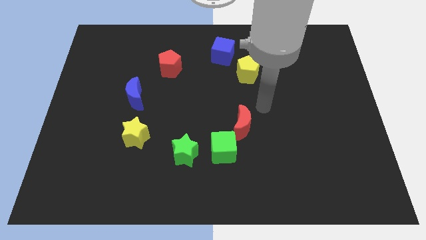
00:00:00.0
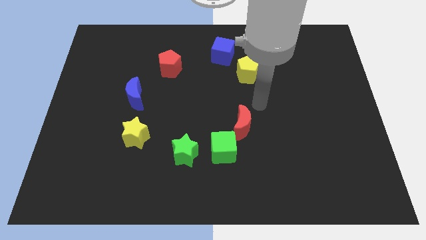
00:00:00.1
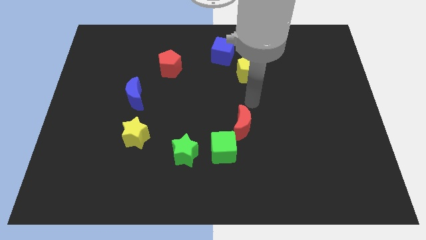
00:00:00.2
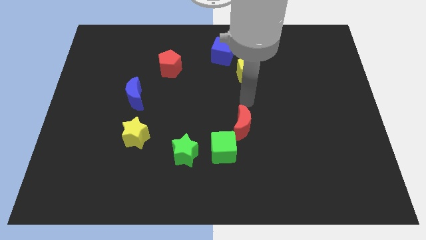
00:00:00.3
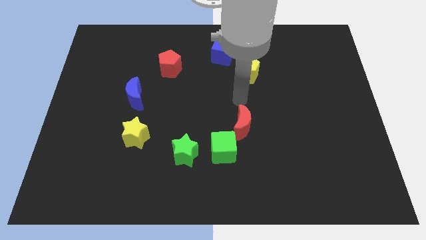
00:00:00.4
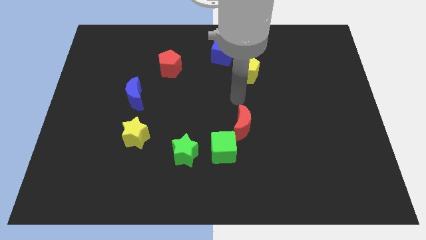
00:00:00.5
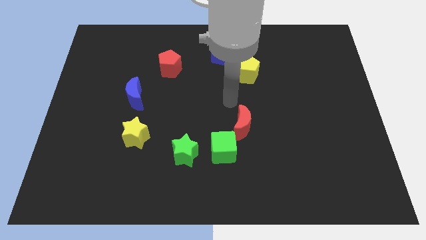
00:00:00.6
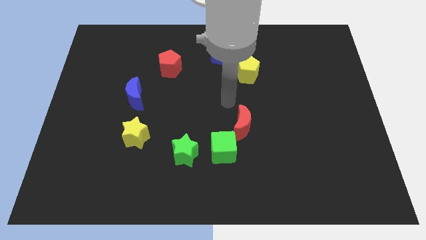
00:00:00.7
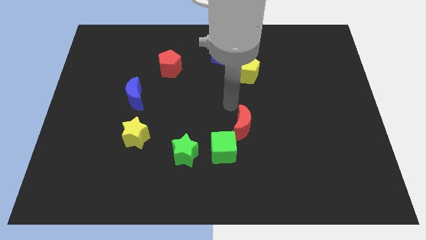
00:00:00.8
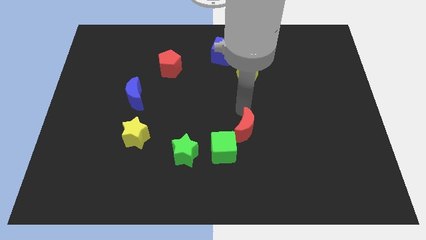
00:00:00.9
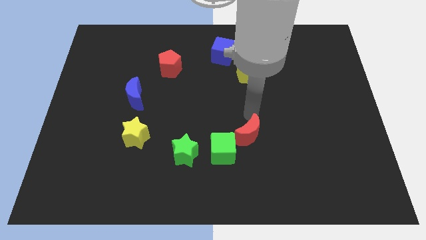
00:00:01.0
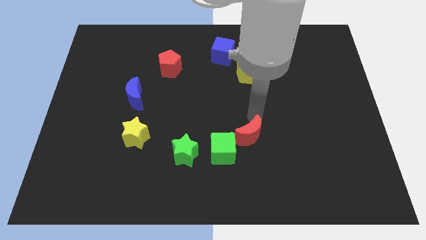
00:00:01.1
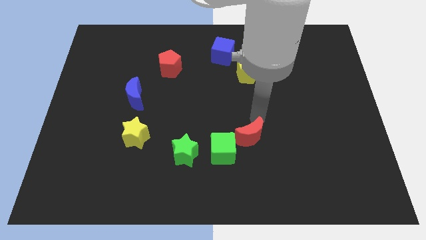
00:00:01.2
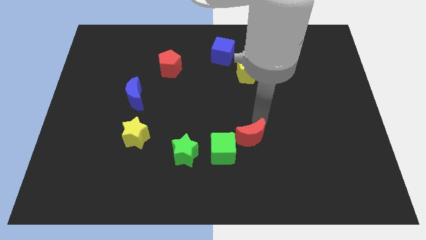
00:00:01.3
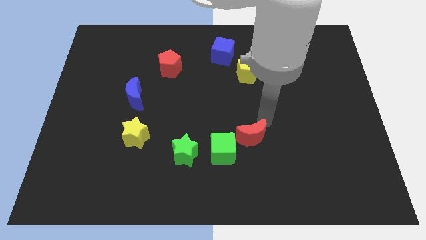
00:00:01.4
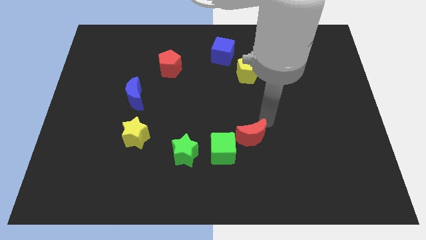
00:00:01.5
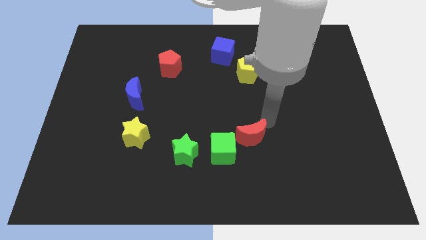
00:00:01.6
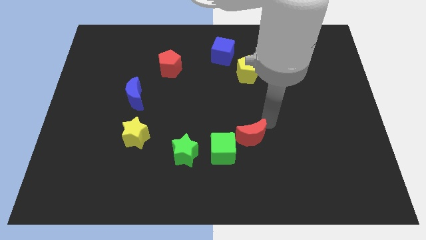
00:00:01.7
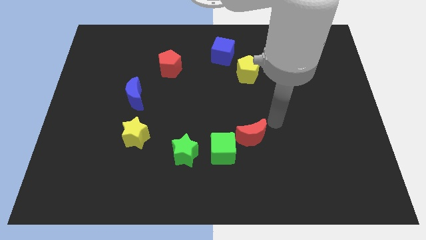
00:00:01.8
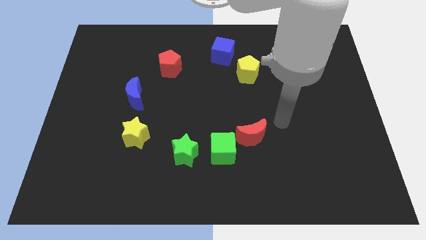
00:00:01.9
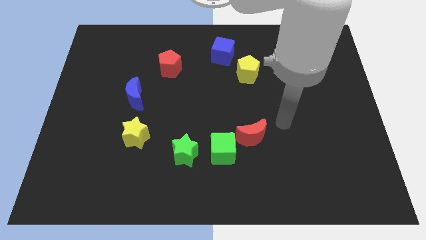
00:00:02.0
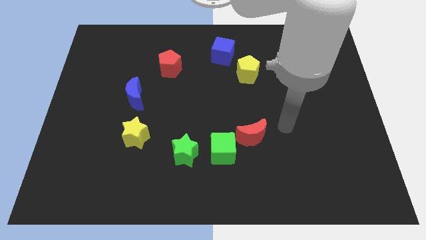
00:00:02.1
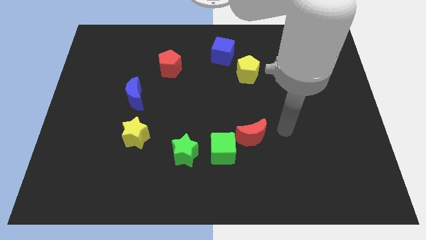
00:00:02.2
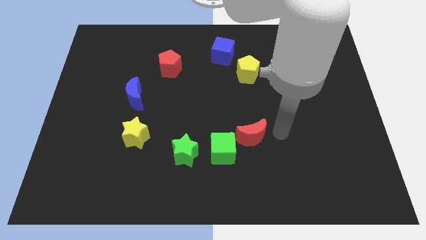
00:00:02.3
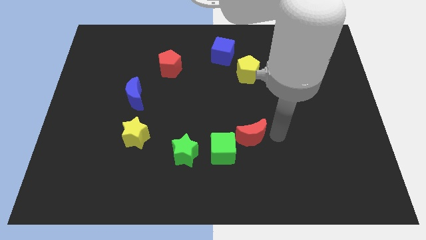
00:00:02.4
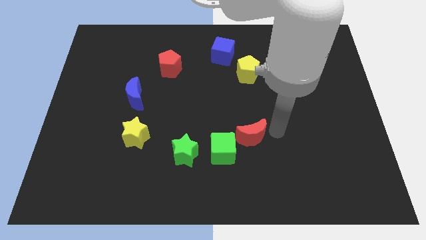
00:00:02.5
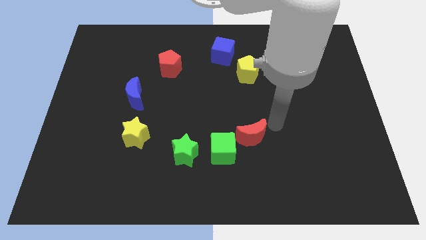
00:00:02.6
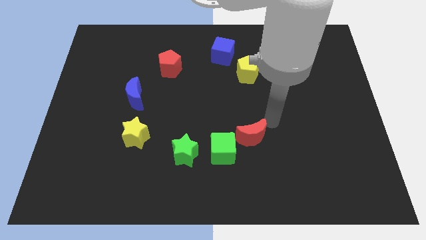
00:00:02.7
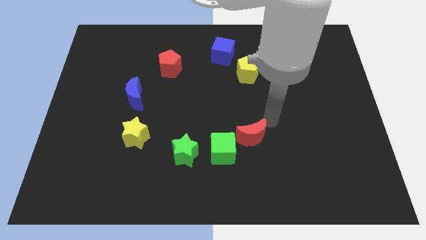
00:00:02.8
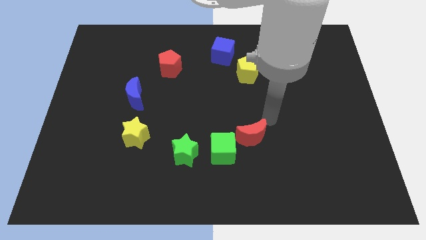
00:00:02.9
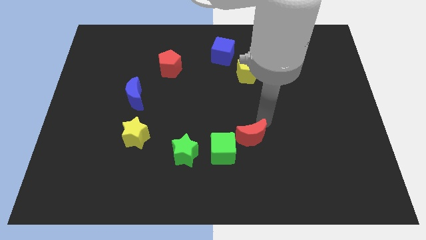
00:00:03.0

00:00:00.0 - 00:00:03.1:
slightly push the red moon towards bottom right side

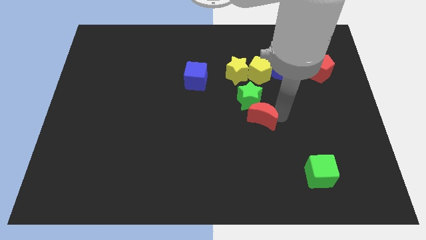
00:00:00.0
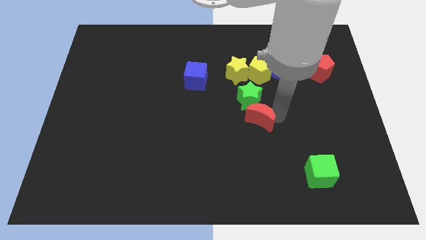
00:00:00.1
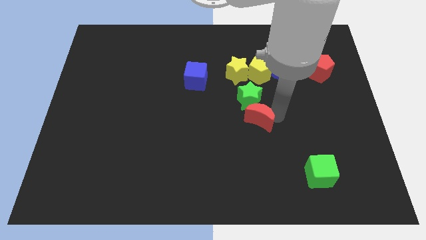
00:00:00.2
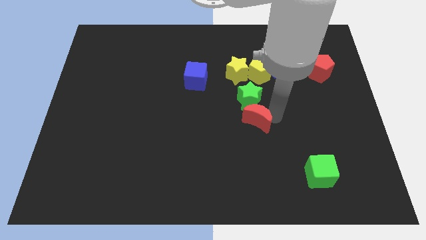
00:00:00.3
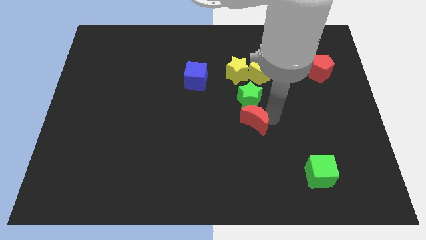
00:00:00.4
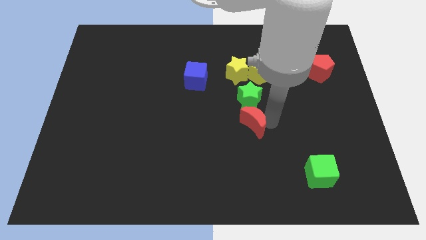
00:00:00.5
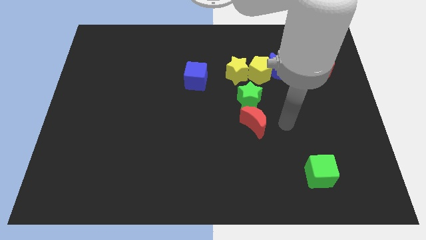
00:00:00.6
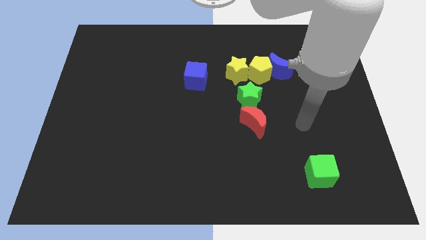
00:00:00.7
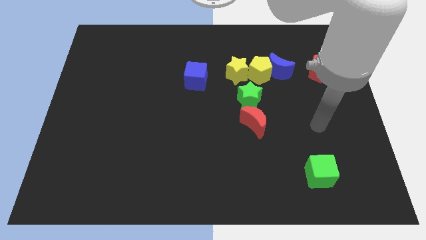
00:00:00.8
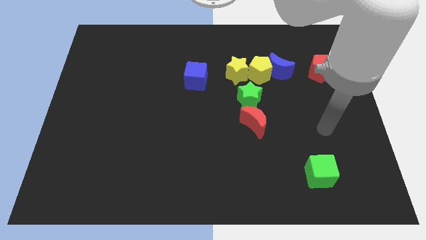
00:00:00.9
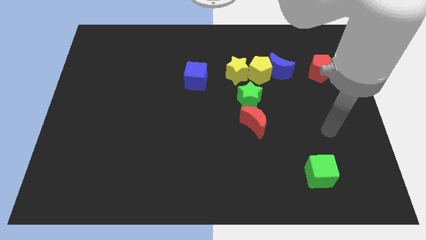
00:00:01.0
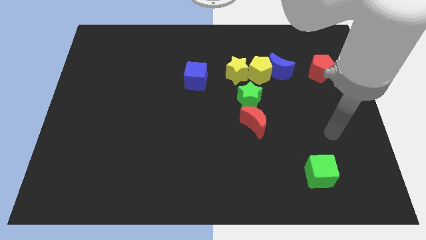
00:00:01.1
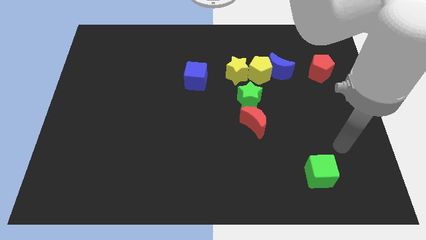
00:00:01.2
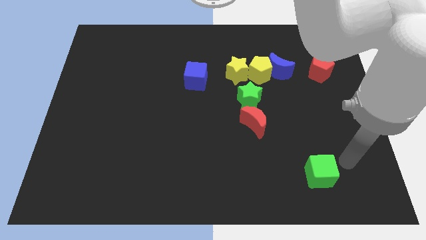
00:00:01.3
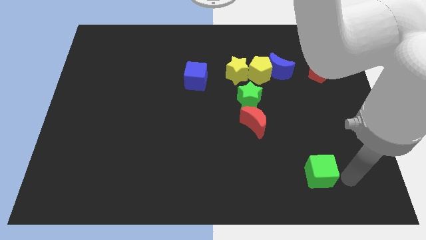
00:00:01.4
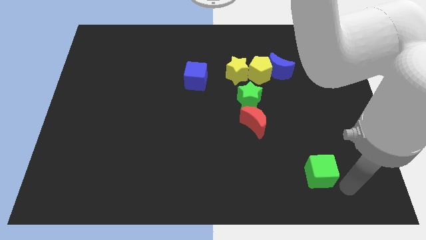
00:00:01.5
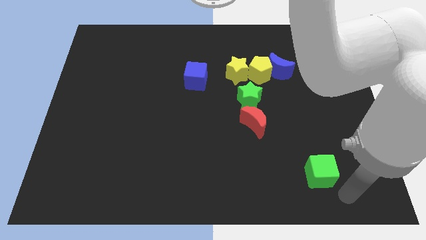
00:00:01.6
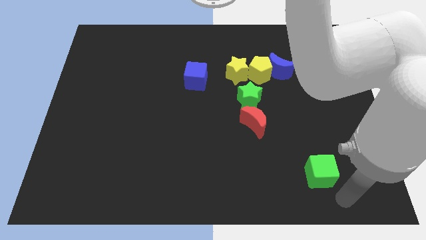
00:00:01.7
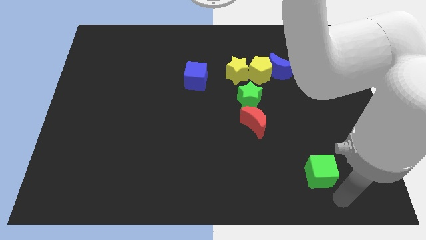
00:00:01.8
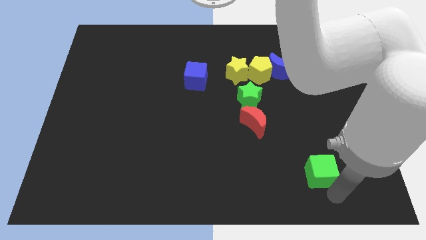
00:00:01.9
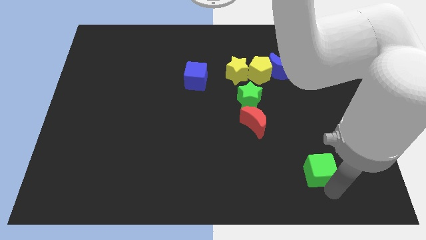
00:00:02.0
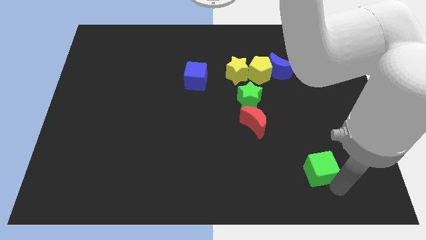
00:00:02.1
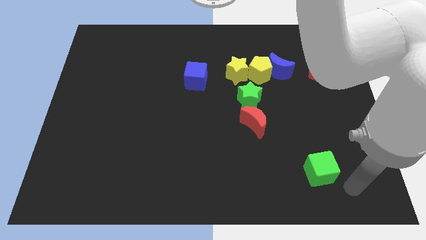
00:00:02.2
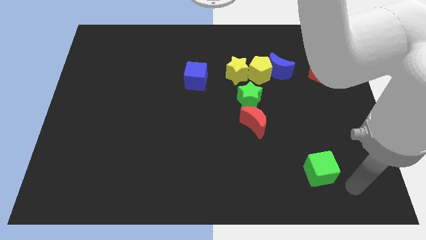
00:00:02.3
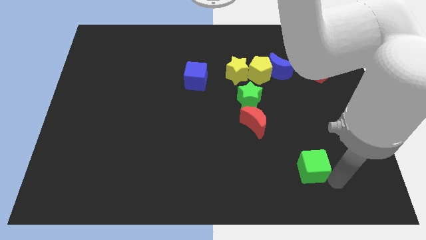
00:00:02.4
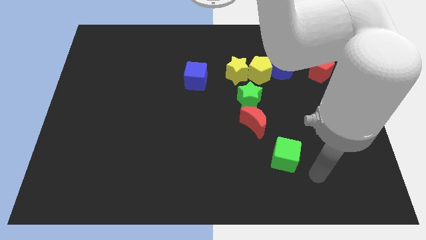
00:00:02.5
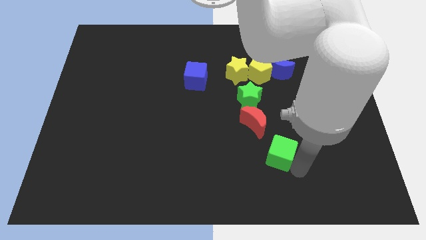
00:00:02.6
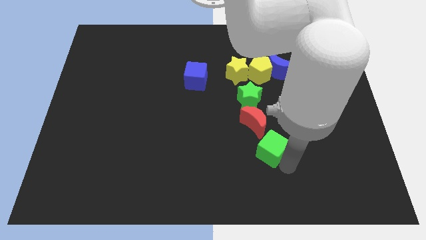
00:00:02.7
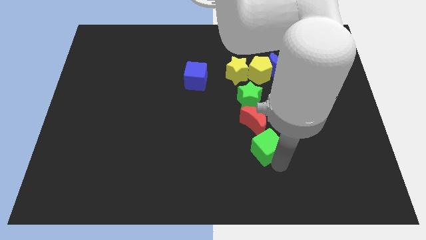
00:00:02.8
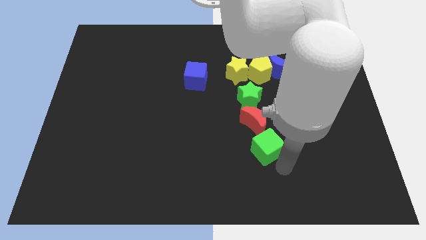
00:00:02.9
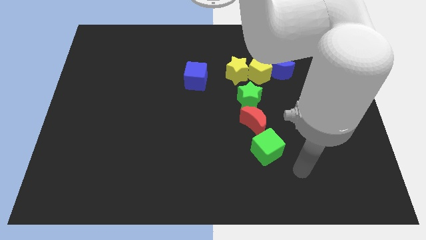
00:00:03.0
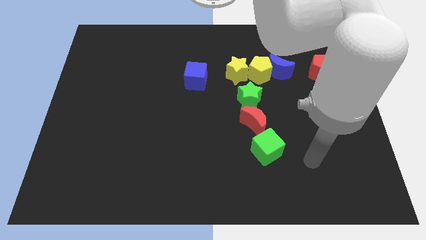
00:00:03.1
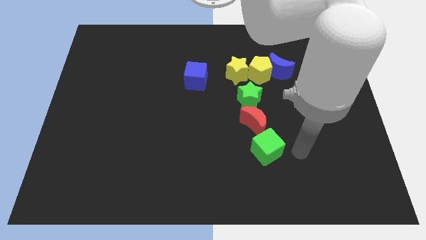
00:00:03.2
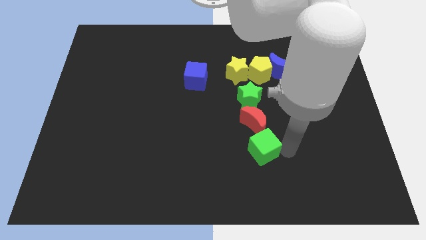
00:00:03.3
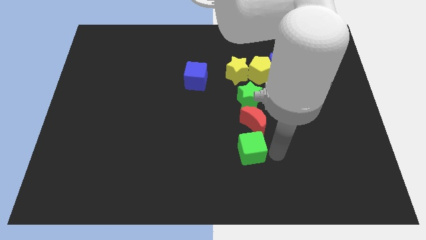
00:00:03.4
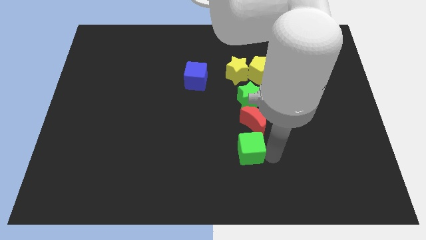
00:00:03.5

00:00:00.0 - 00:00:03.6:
push the green cube below the red moon

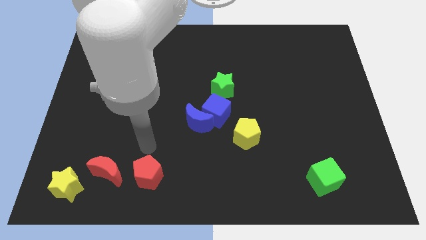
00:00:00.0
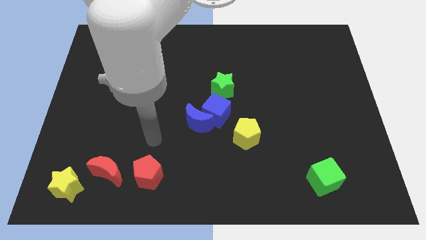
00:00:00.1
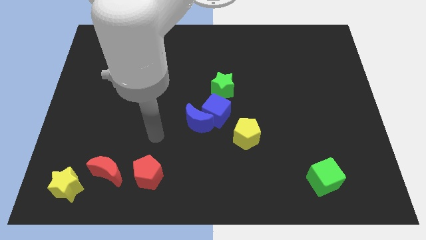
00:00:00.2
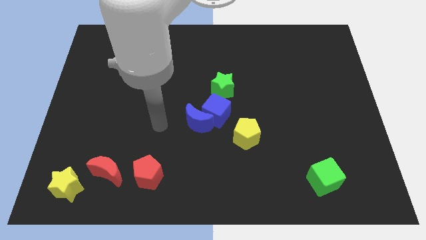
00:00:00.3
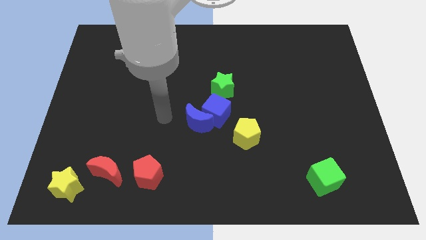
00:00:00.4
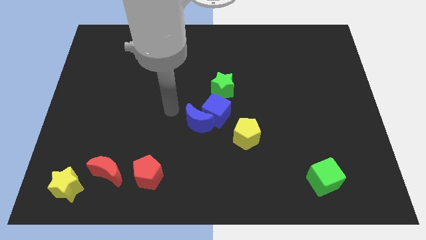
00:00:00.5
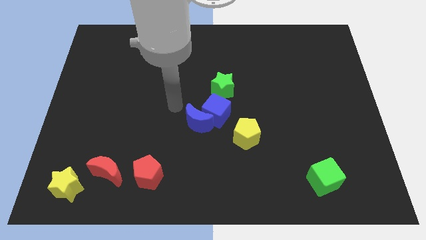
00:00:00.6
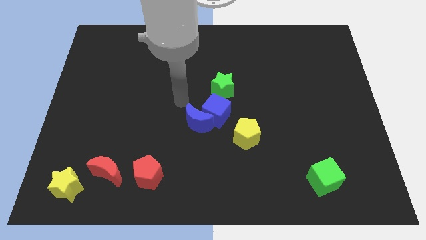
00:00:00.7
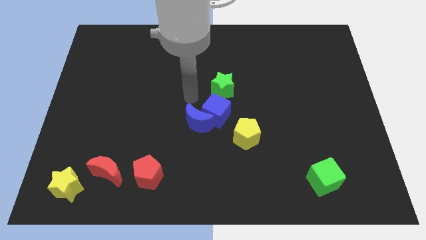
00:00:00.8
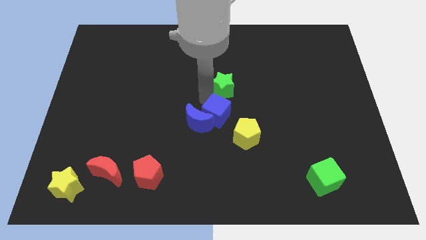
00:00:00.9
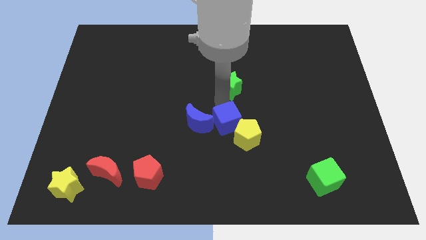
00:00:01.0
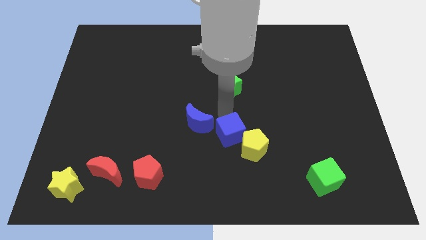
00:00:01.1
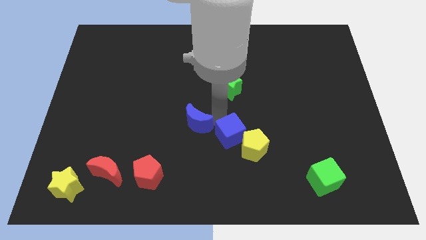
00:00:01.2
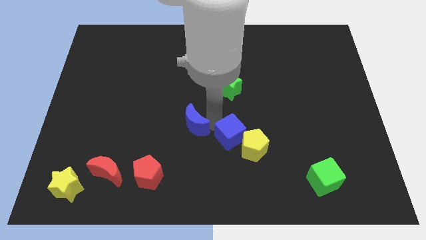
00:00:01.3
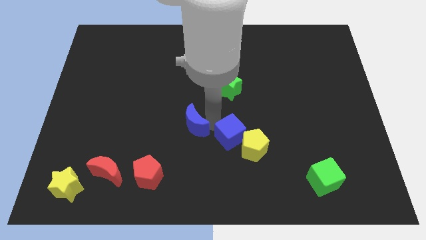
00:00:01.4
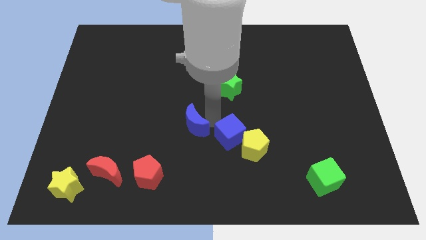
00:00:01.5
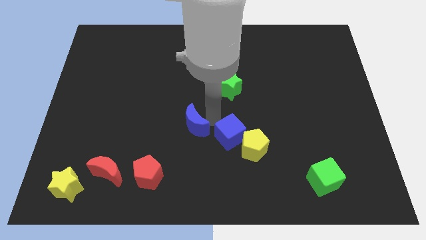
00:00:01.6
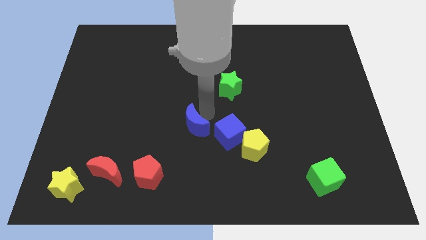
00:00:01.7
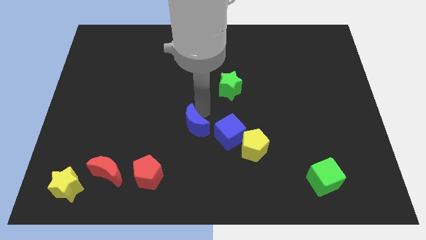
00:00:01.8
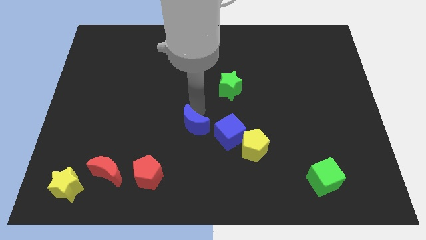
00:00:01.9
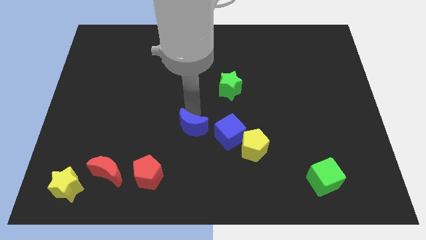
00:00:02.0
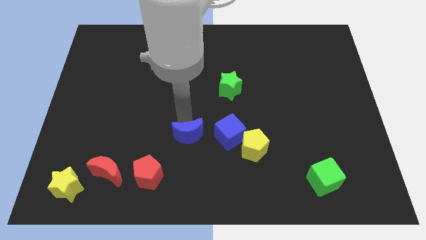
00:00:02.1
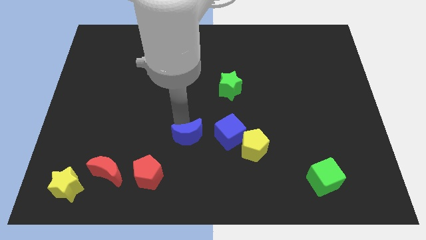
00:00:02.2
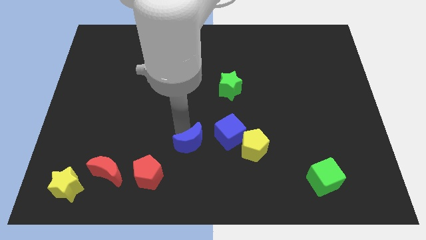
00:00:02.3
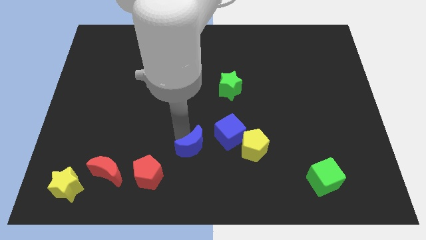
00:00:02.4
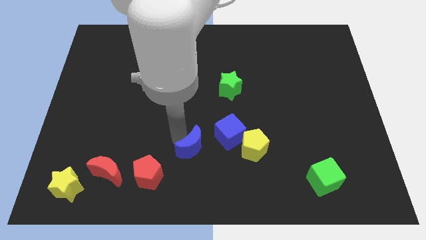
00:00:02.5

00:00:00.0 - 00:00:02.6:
push the blue crescent to the left of blue cube
